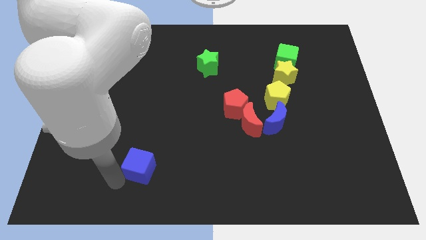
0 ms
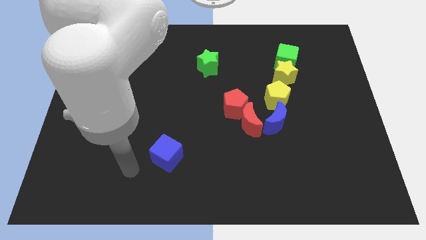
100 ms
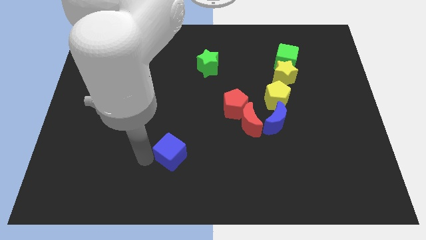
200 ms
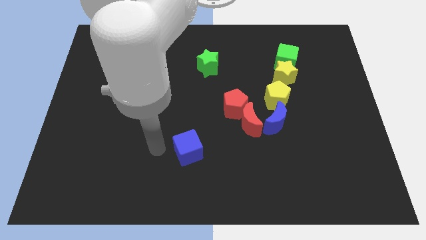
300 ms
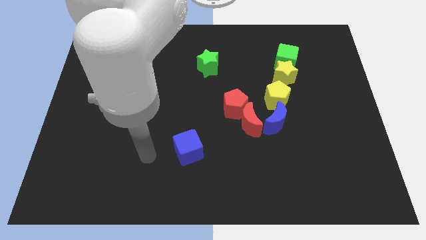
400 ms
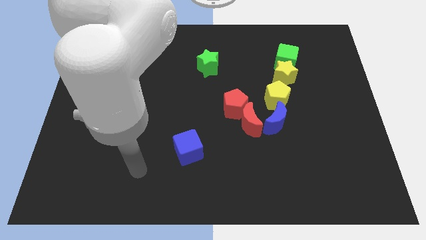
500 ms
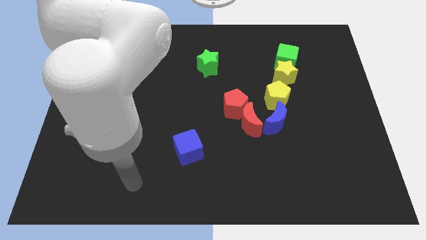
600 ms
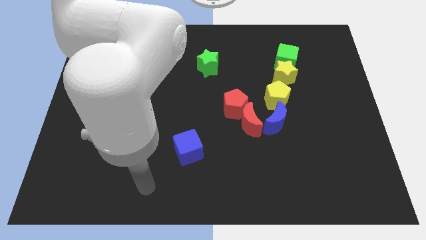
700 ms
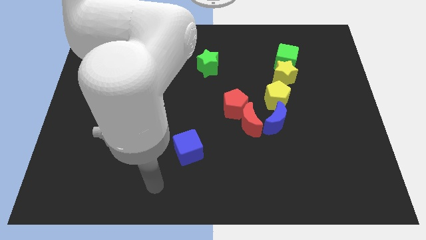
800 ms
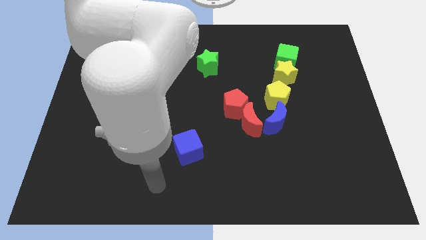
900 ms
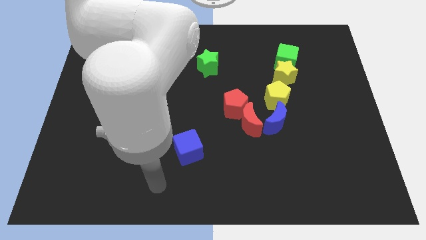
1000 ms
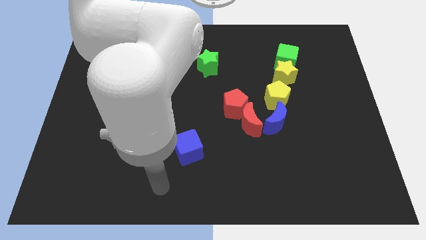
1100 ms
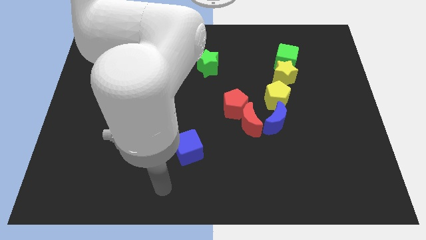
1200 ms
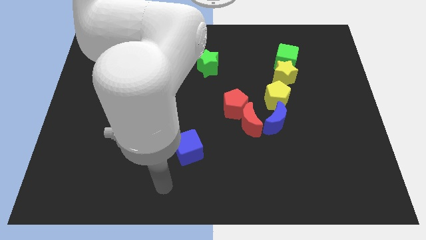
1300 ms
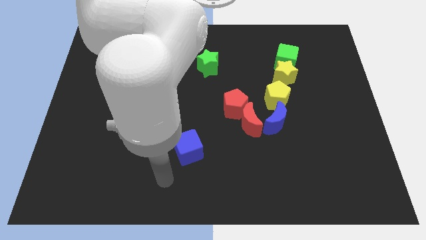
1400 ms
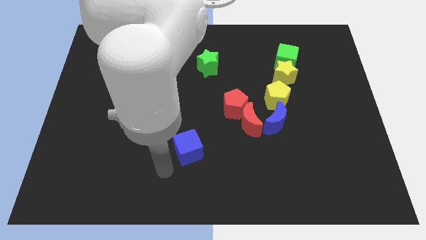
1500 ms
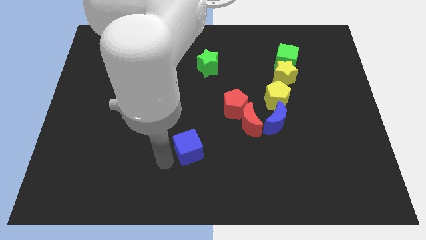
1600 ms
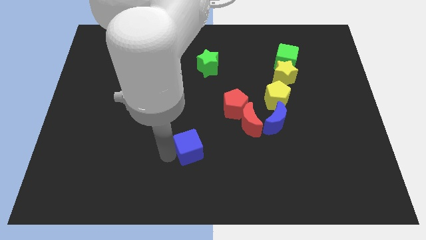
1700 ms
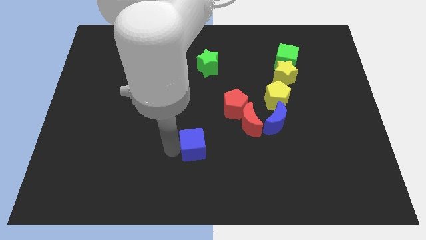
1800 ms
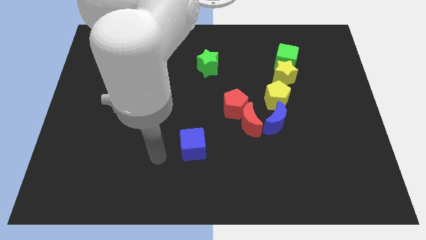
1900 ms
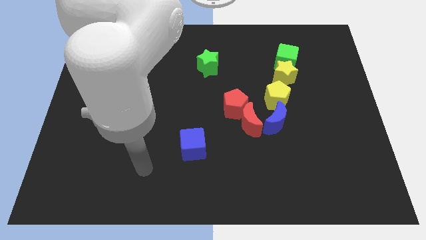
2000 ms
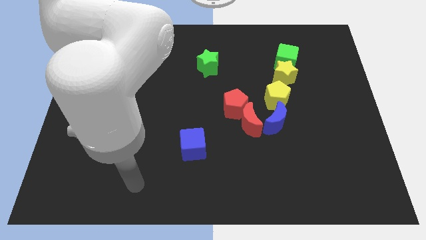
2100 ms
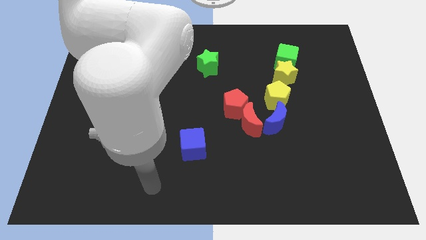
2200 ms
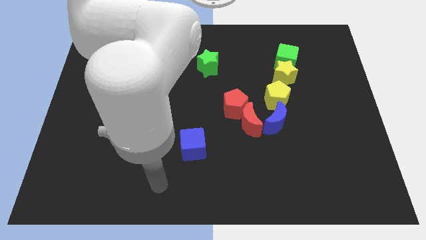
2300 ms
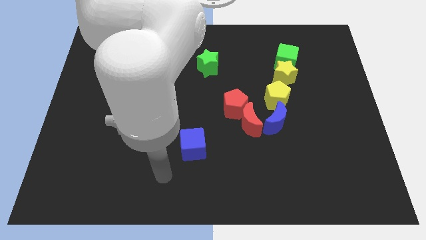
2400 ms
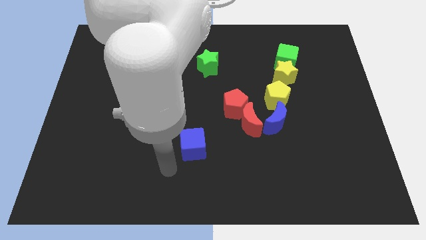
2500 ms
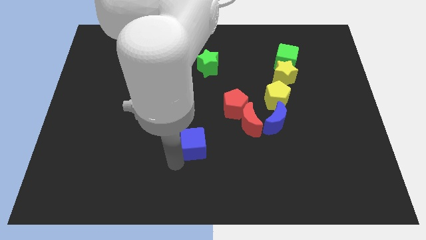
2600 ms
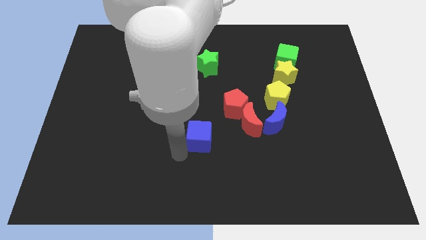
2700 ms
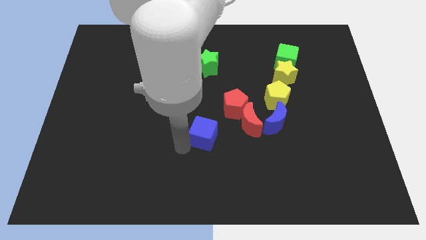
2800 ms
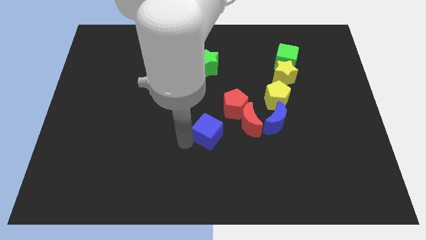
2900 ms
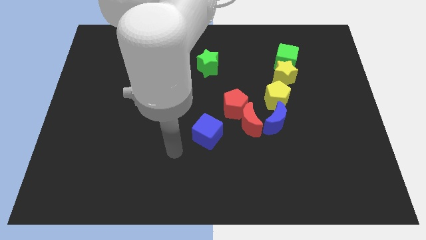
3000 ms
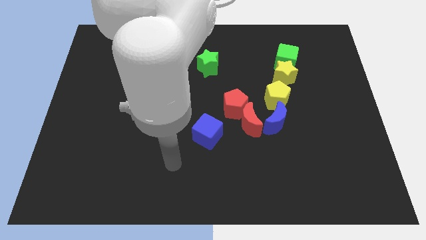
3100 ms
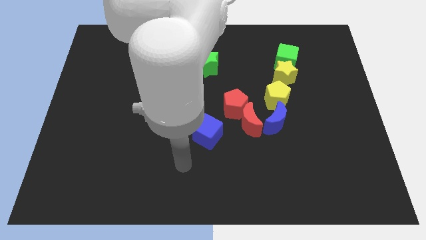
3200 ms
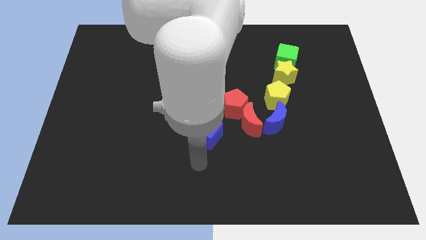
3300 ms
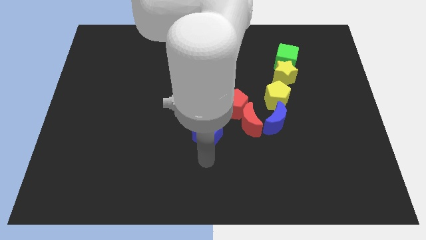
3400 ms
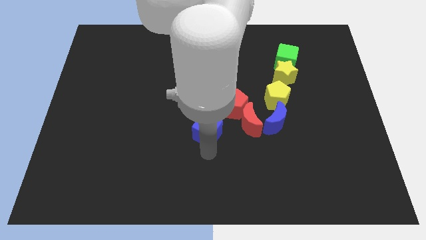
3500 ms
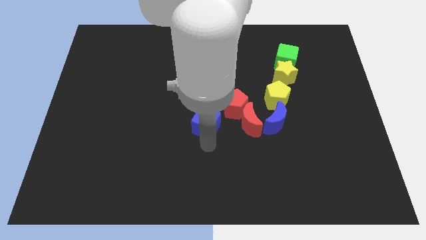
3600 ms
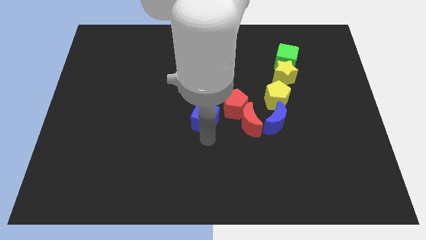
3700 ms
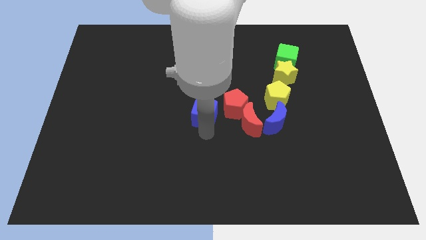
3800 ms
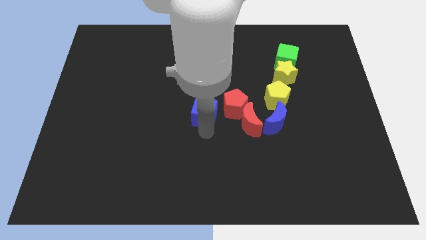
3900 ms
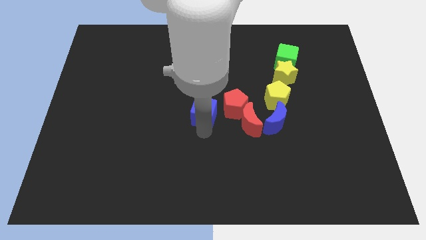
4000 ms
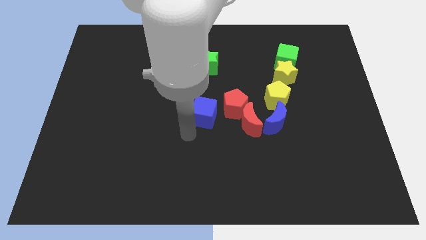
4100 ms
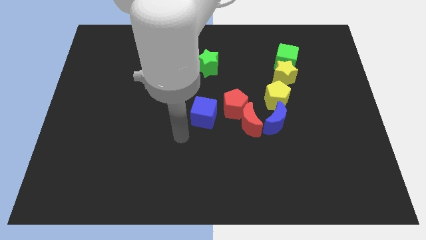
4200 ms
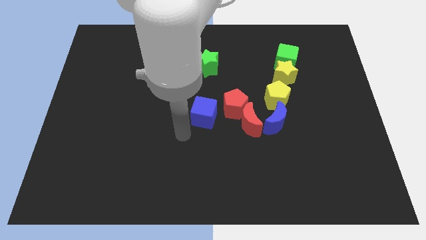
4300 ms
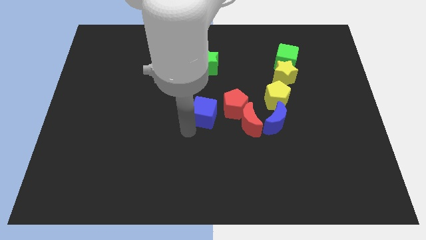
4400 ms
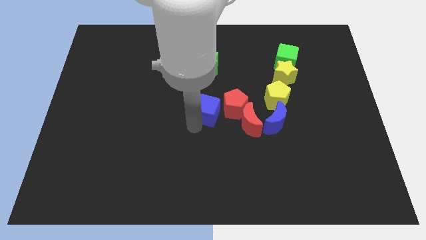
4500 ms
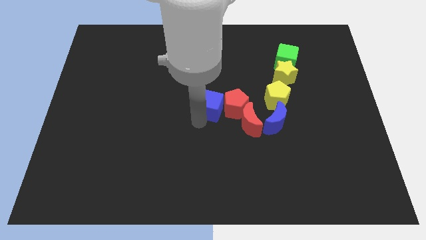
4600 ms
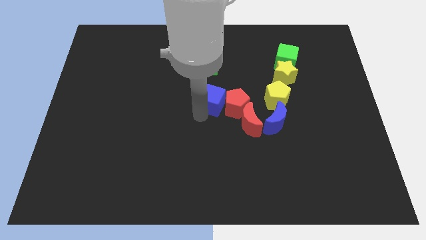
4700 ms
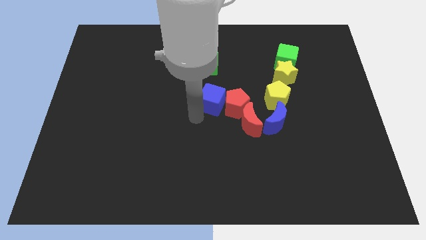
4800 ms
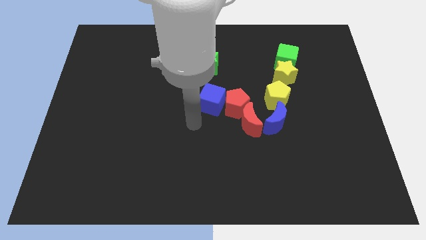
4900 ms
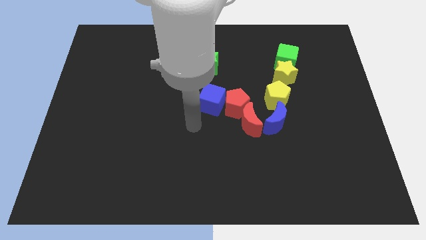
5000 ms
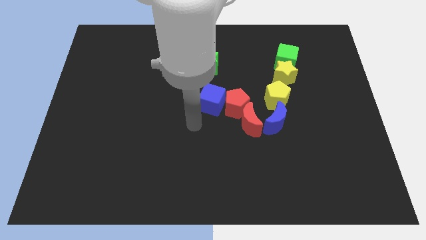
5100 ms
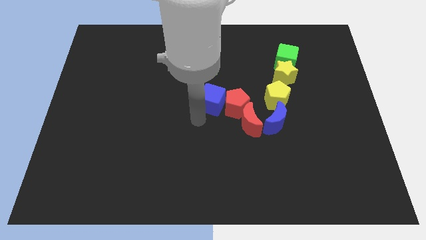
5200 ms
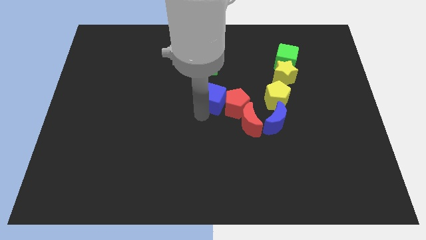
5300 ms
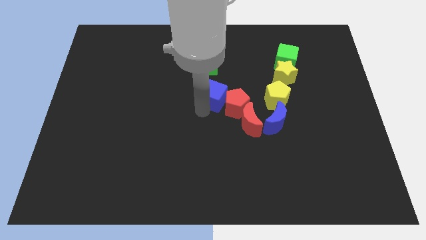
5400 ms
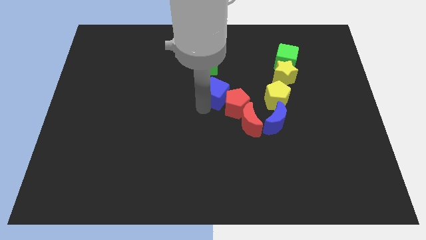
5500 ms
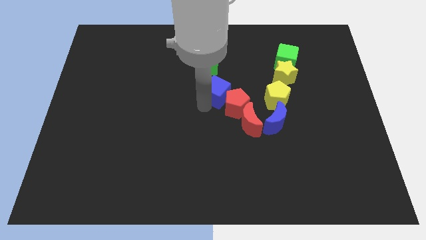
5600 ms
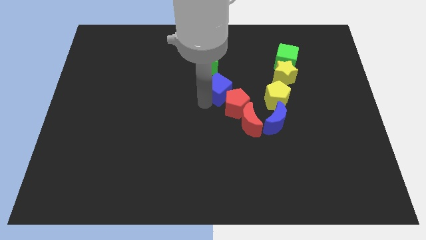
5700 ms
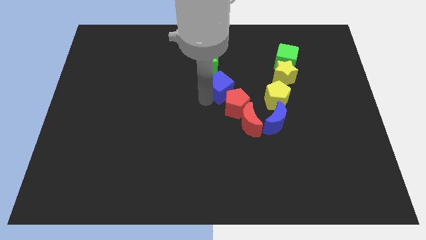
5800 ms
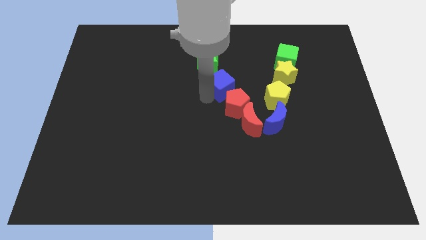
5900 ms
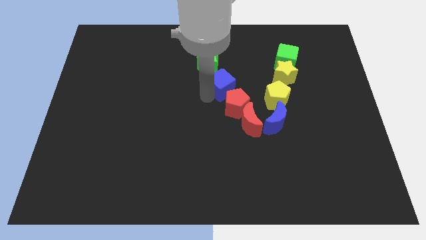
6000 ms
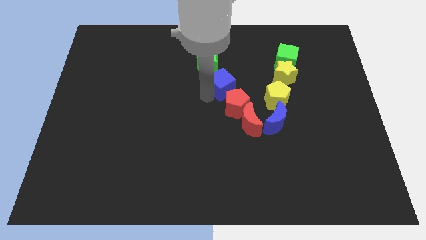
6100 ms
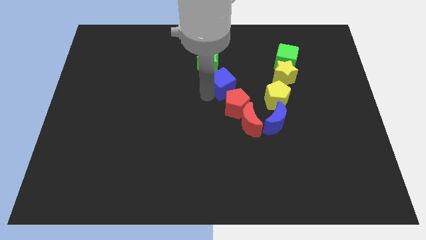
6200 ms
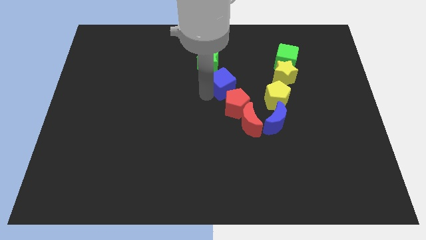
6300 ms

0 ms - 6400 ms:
move the blue cube in between the green star and the red pentagon

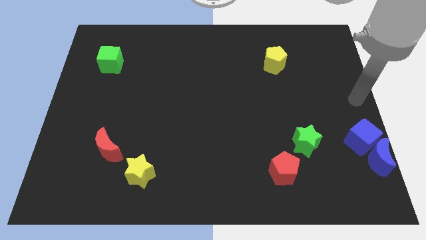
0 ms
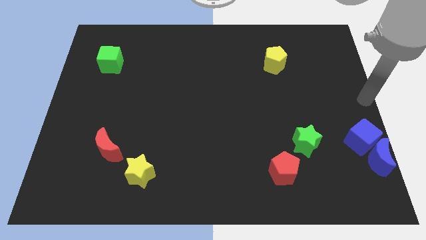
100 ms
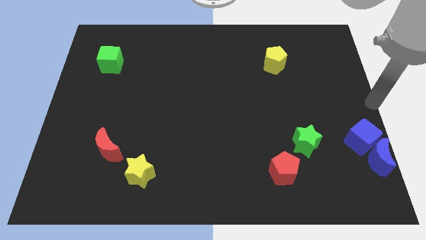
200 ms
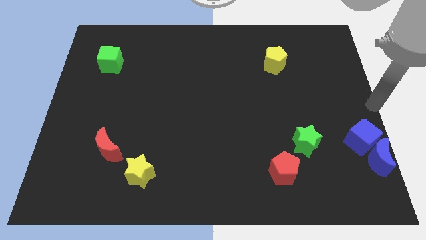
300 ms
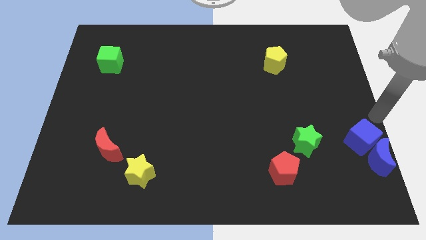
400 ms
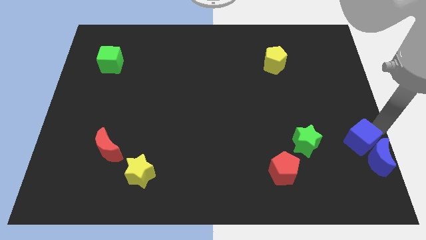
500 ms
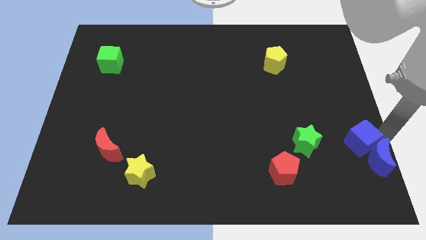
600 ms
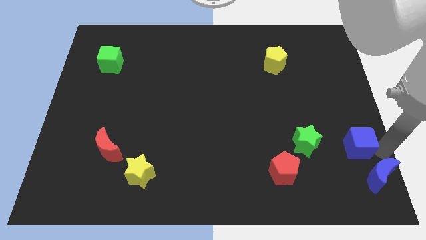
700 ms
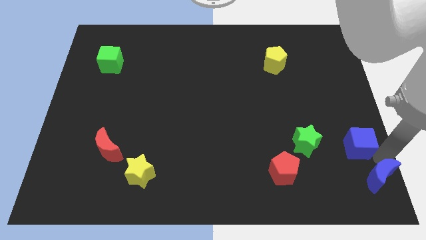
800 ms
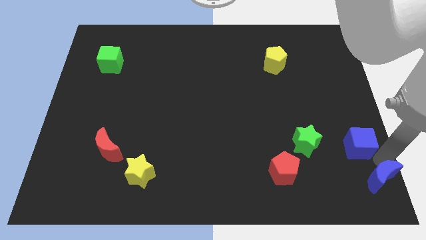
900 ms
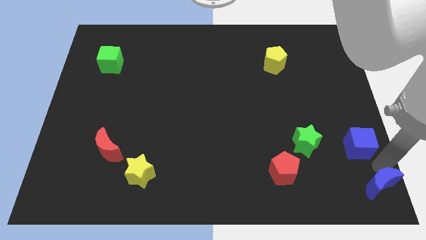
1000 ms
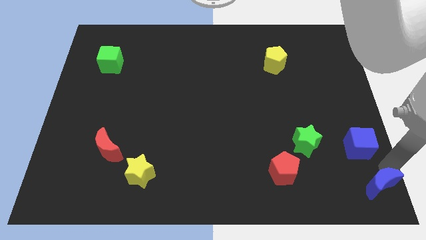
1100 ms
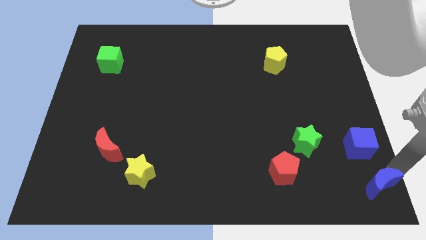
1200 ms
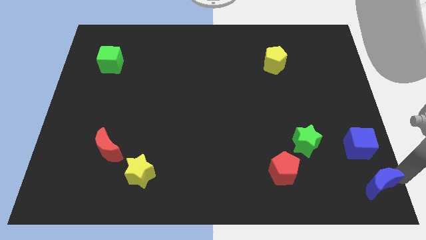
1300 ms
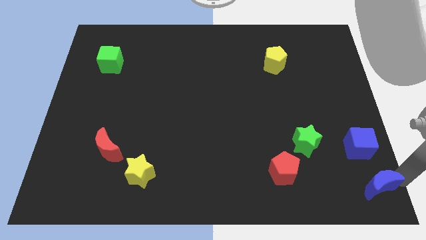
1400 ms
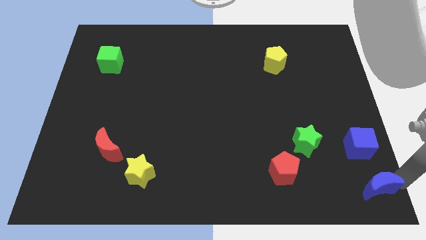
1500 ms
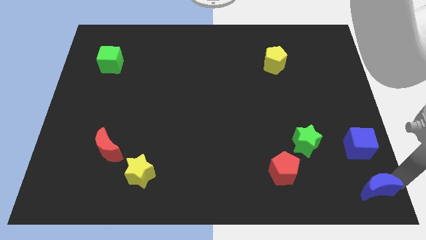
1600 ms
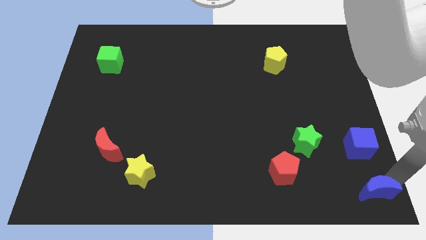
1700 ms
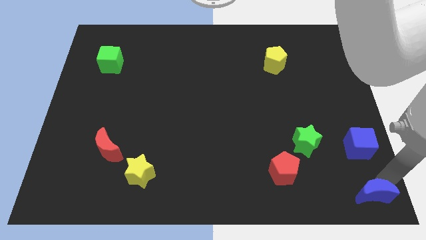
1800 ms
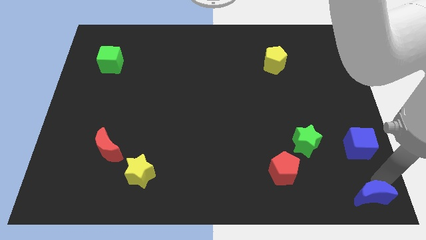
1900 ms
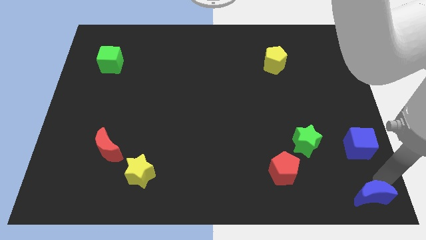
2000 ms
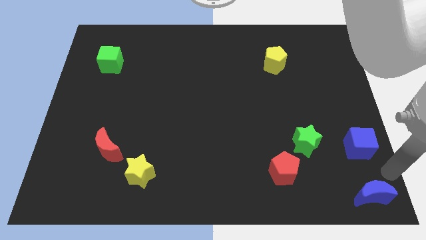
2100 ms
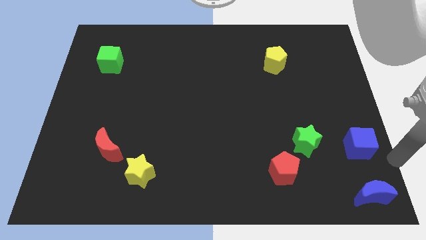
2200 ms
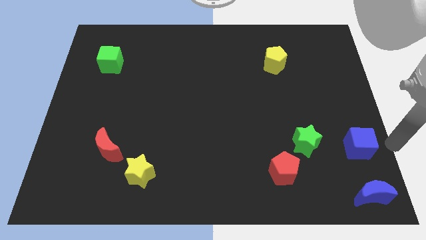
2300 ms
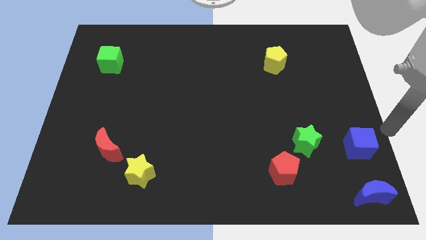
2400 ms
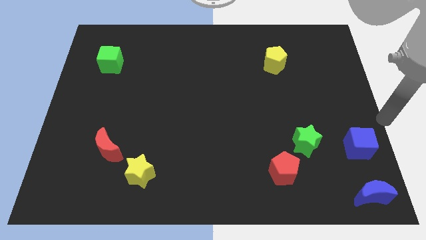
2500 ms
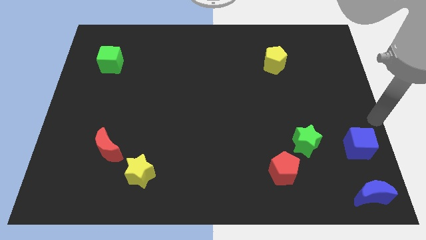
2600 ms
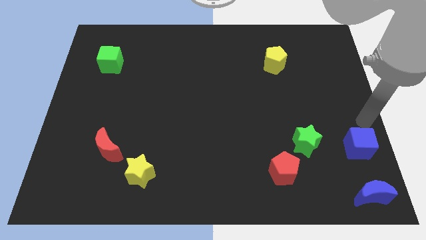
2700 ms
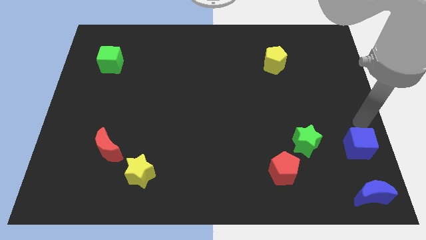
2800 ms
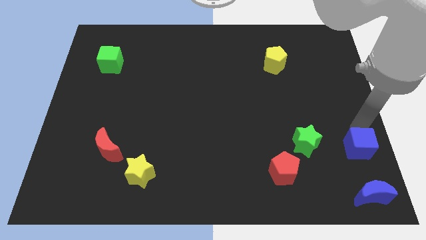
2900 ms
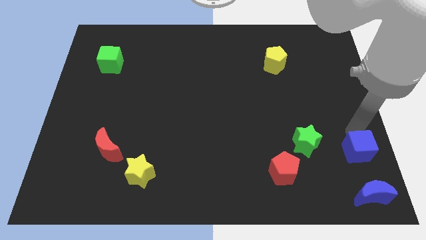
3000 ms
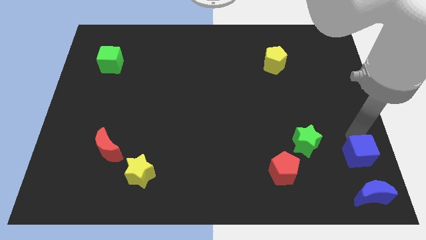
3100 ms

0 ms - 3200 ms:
move the blue crescent to the bottom right corner
